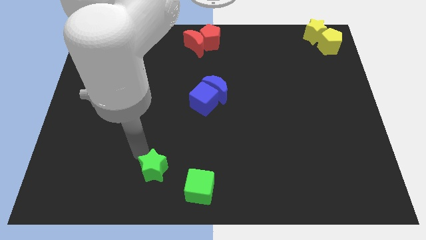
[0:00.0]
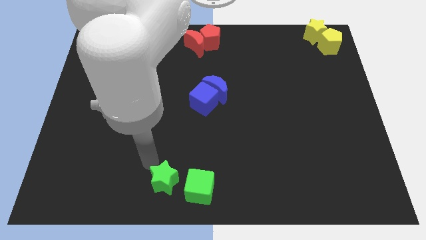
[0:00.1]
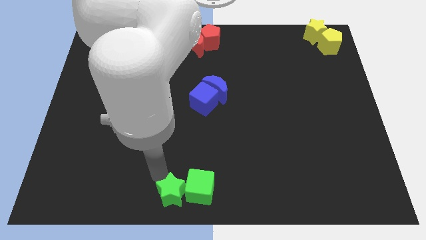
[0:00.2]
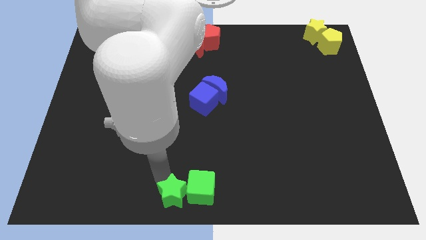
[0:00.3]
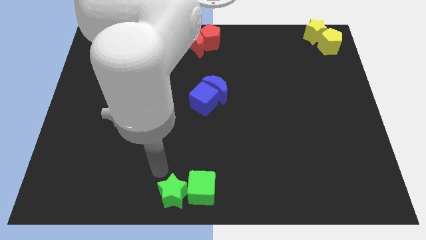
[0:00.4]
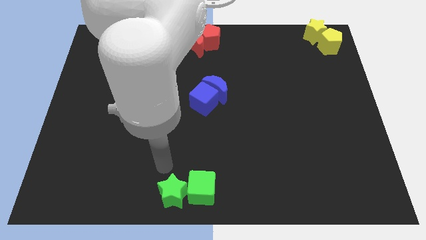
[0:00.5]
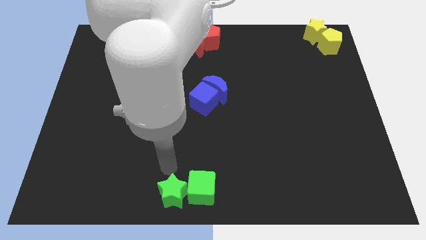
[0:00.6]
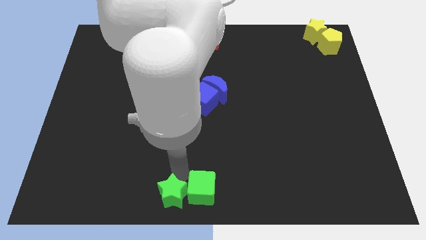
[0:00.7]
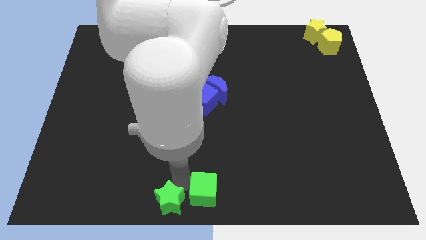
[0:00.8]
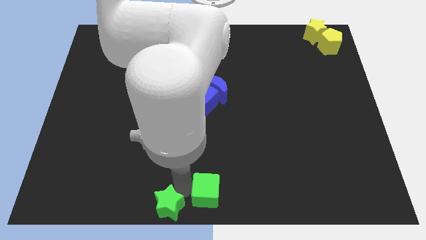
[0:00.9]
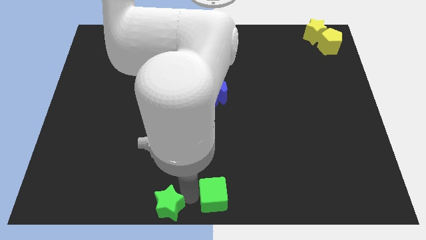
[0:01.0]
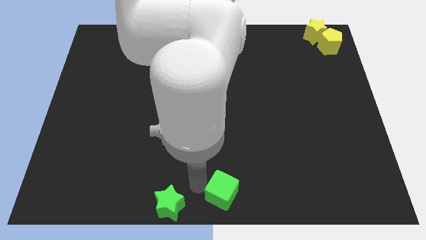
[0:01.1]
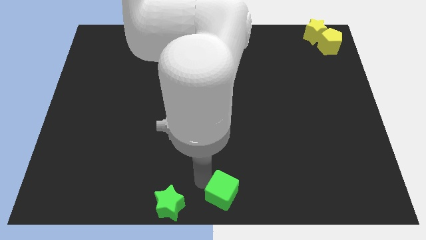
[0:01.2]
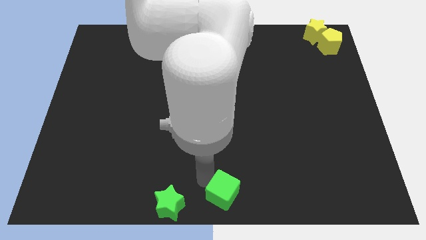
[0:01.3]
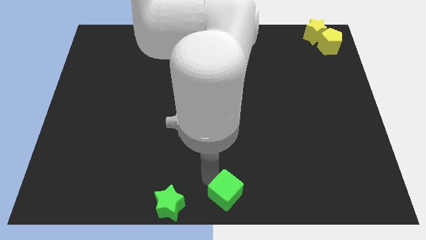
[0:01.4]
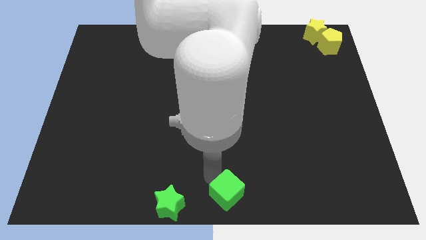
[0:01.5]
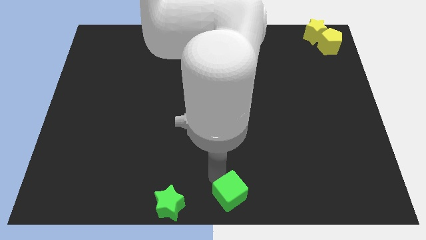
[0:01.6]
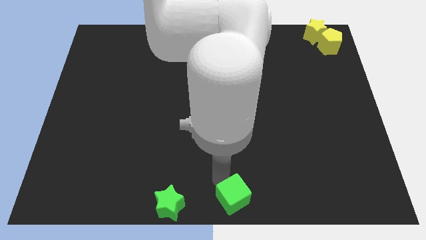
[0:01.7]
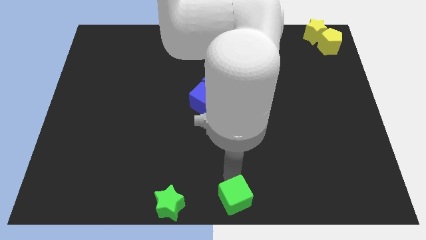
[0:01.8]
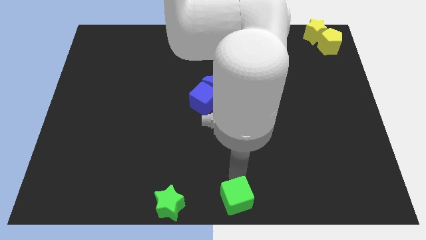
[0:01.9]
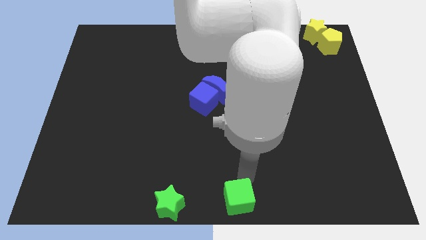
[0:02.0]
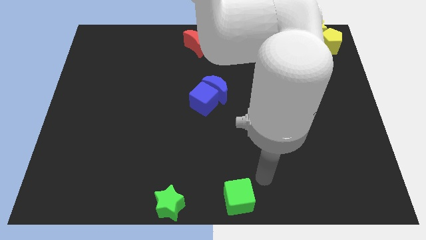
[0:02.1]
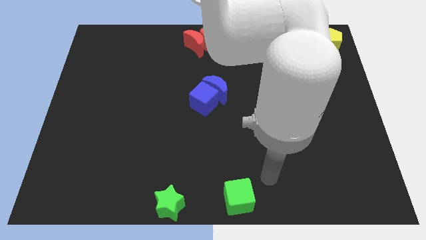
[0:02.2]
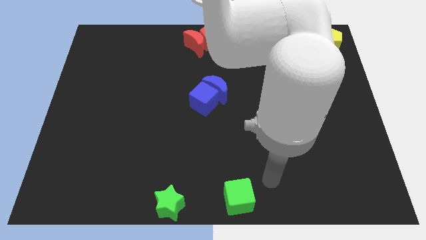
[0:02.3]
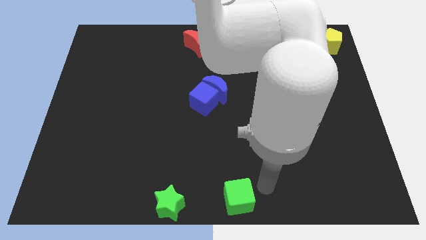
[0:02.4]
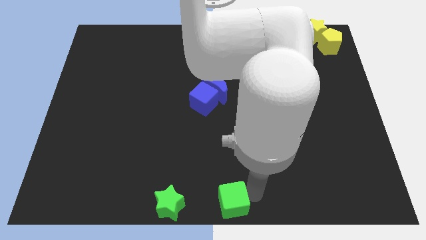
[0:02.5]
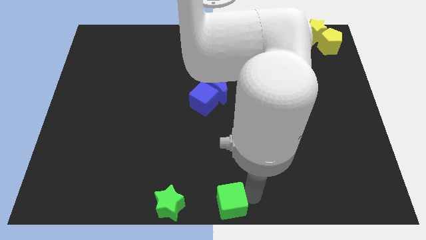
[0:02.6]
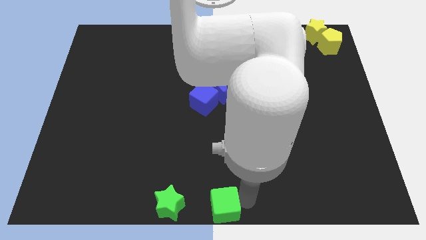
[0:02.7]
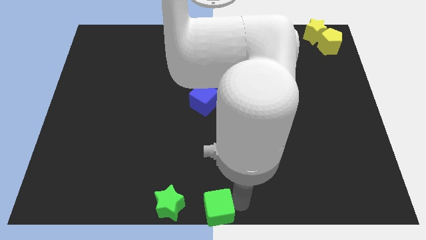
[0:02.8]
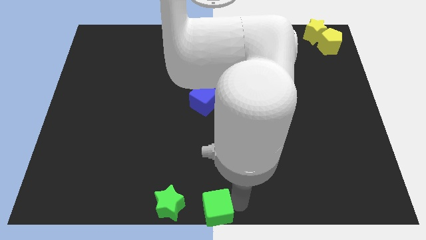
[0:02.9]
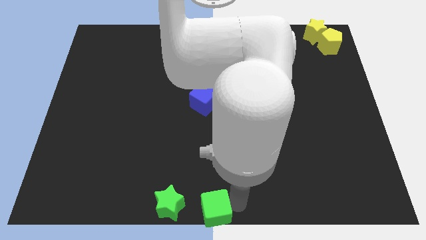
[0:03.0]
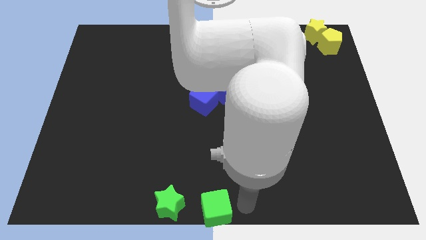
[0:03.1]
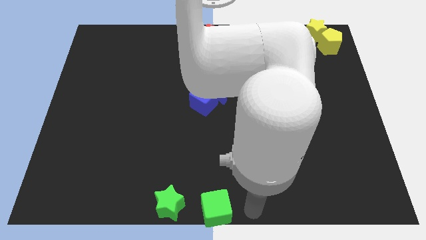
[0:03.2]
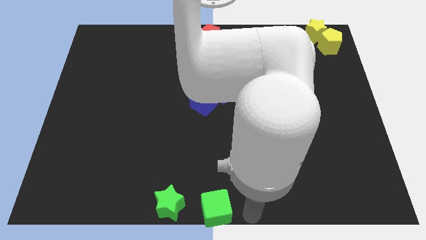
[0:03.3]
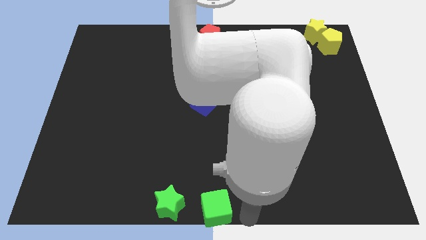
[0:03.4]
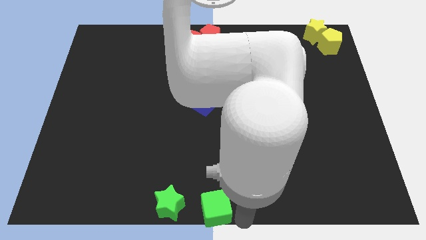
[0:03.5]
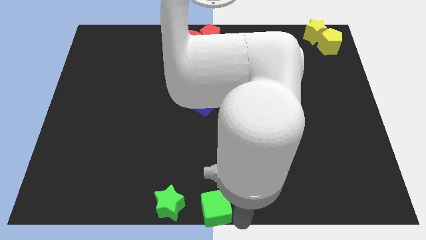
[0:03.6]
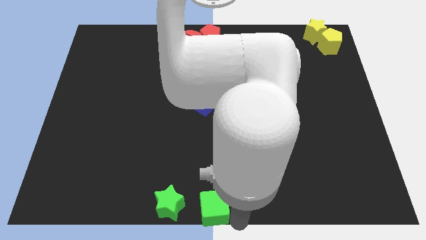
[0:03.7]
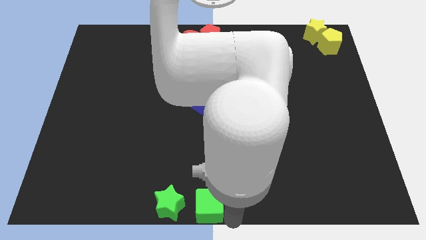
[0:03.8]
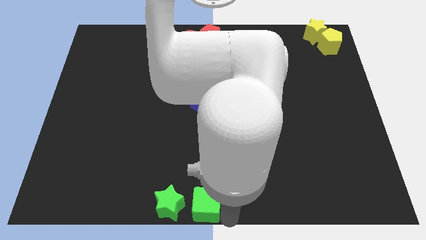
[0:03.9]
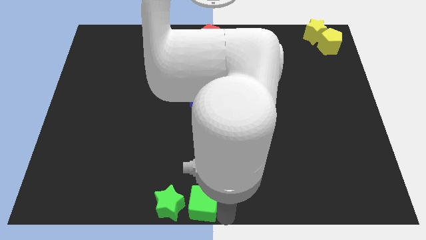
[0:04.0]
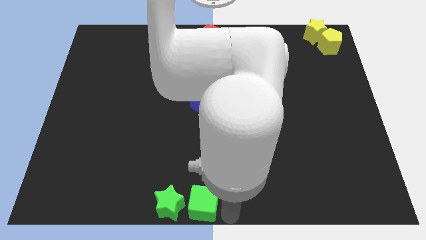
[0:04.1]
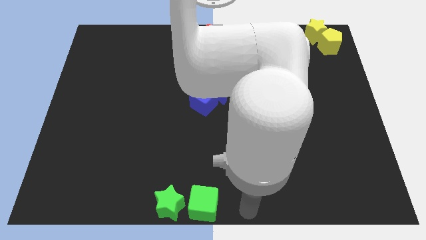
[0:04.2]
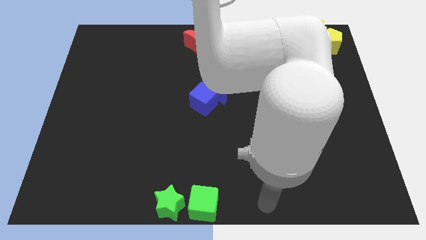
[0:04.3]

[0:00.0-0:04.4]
move the green blocks close to each other

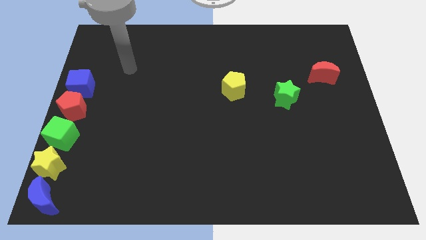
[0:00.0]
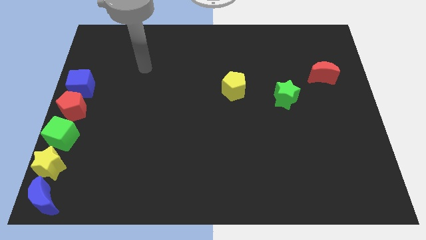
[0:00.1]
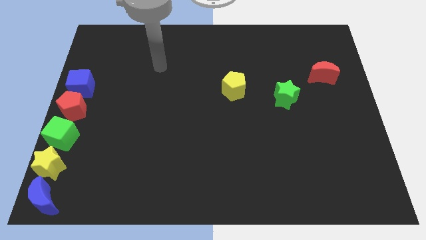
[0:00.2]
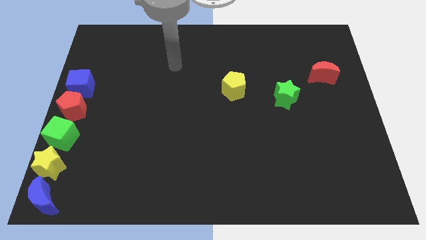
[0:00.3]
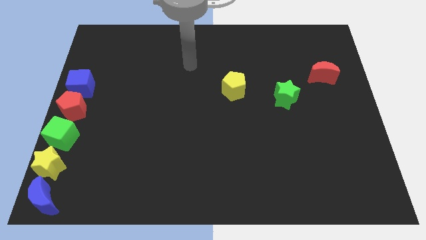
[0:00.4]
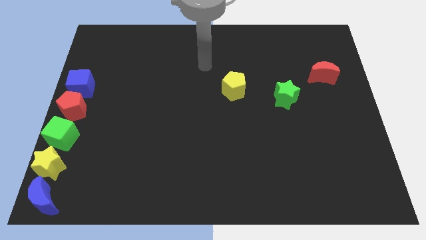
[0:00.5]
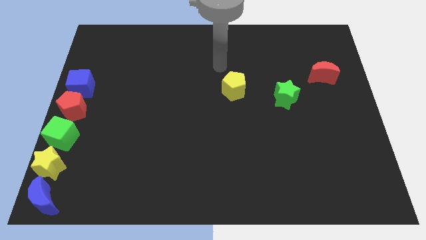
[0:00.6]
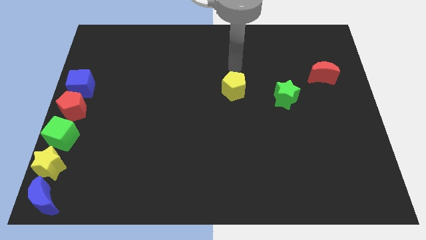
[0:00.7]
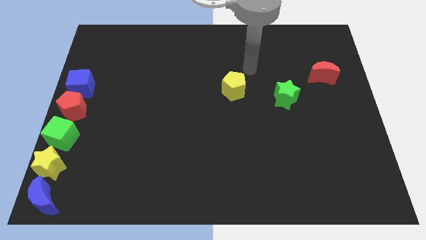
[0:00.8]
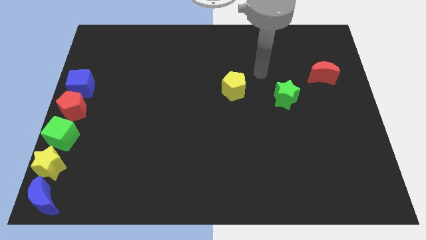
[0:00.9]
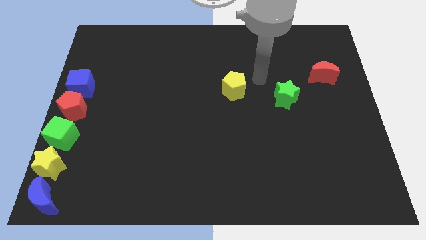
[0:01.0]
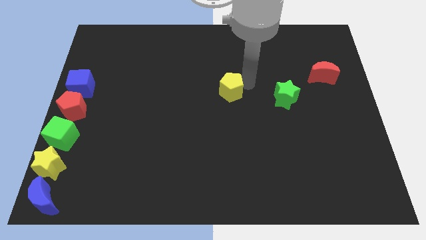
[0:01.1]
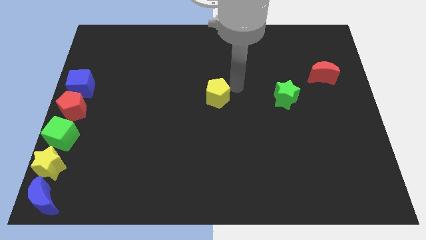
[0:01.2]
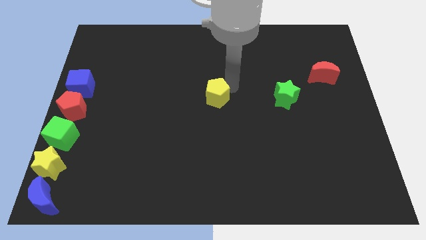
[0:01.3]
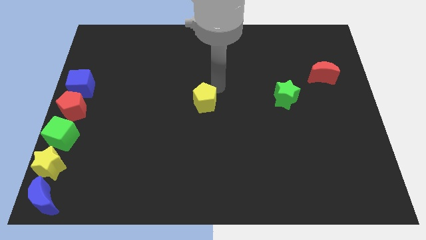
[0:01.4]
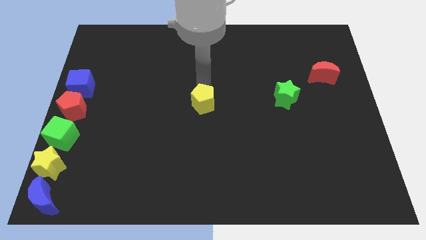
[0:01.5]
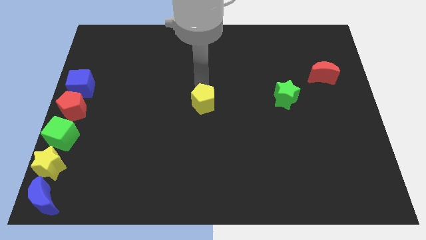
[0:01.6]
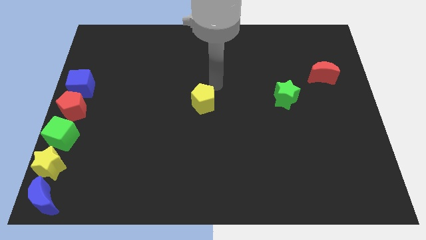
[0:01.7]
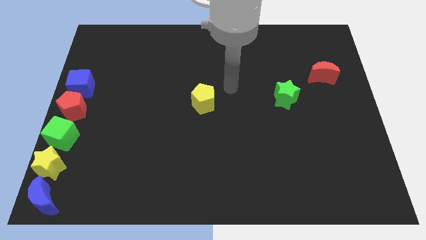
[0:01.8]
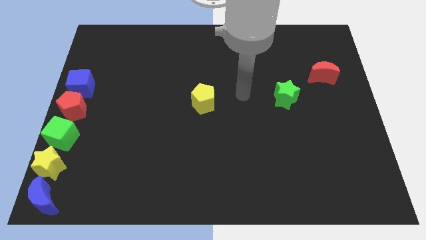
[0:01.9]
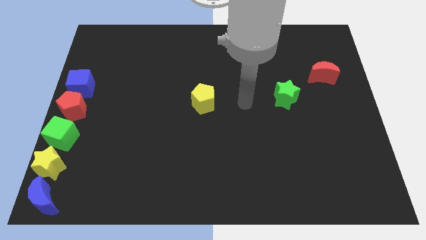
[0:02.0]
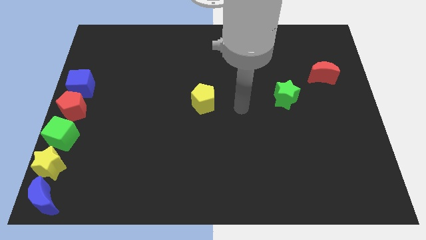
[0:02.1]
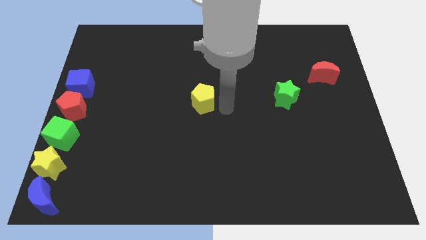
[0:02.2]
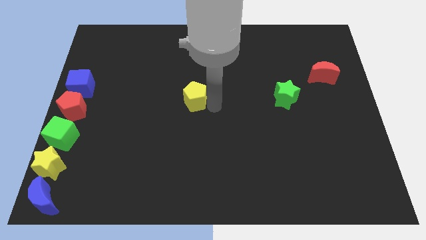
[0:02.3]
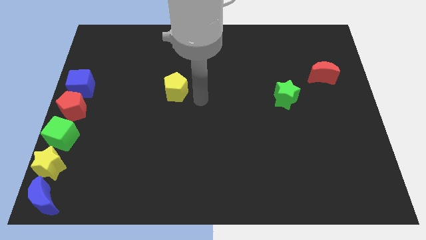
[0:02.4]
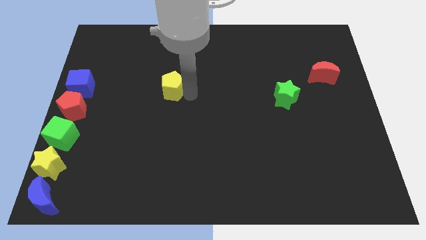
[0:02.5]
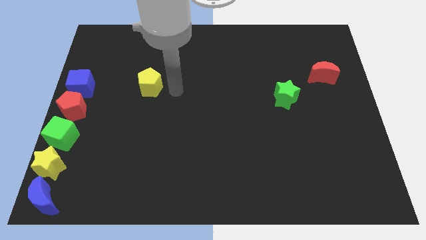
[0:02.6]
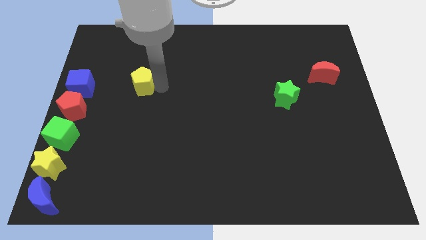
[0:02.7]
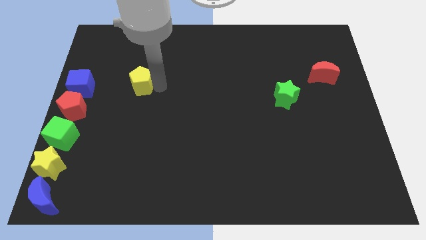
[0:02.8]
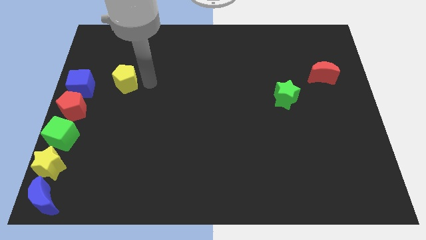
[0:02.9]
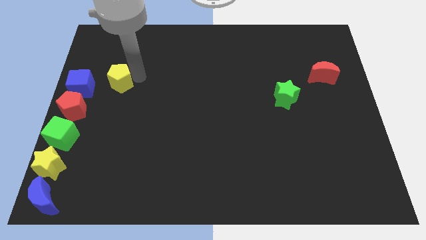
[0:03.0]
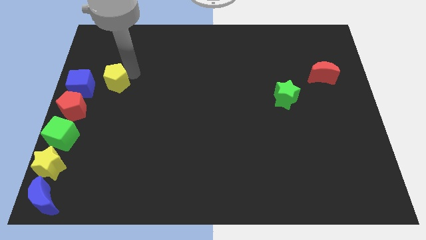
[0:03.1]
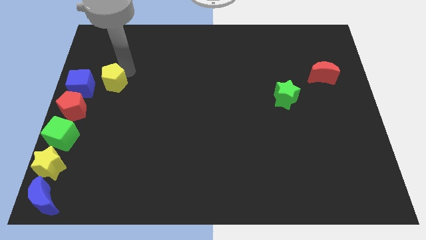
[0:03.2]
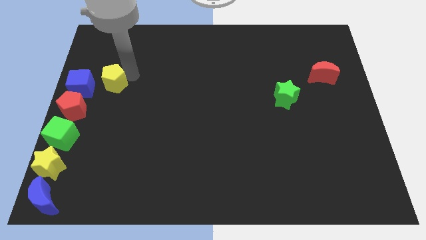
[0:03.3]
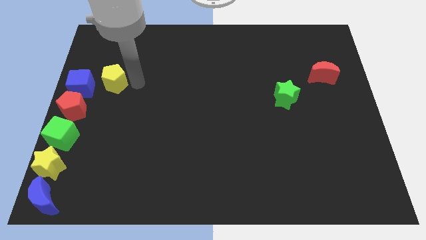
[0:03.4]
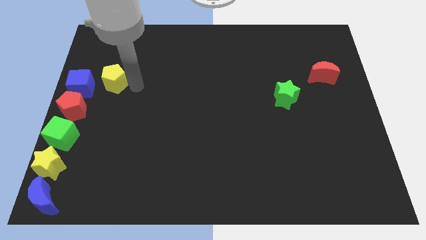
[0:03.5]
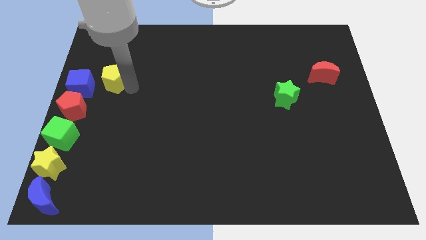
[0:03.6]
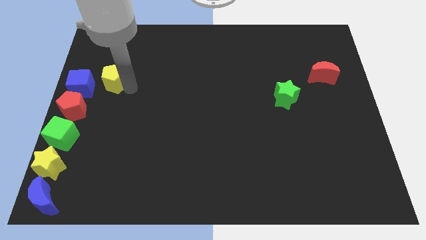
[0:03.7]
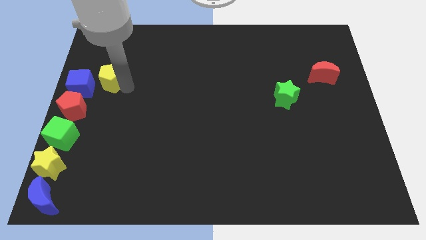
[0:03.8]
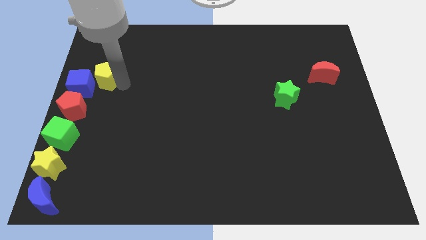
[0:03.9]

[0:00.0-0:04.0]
move the yellow pentagon close to the blue cube

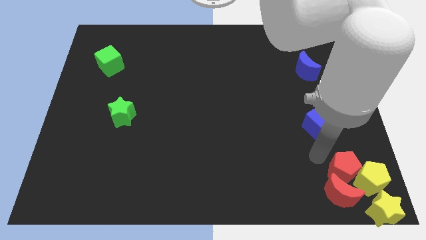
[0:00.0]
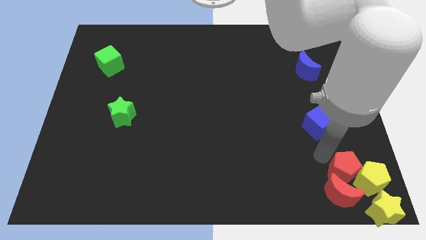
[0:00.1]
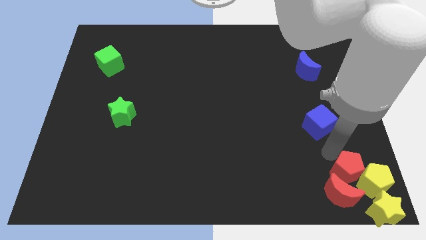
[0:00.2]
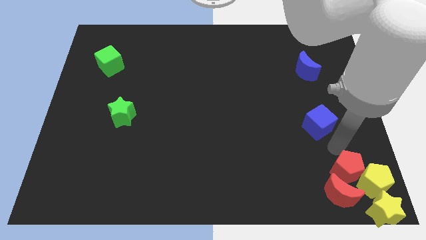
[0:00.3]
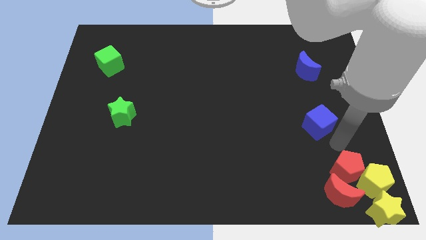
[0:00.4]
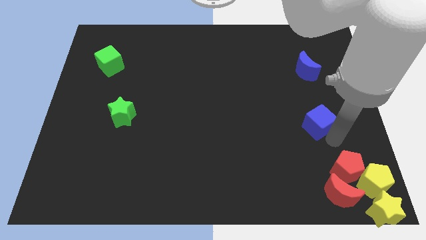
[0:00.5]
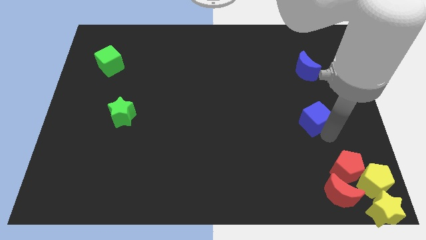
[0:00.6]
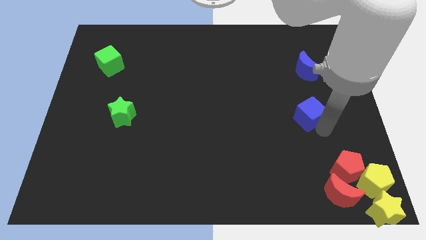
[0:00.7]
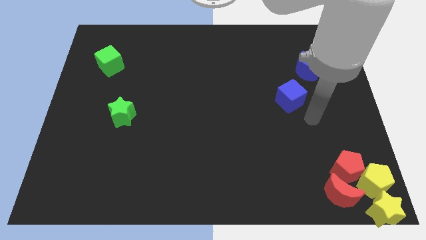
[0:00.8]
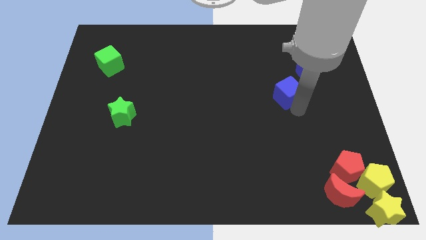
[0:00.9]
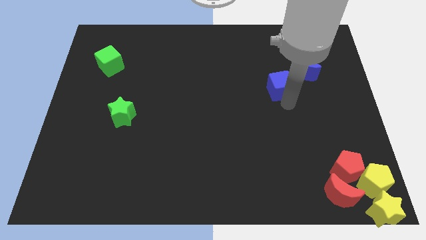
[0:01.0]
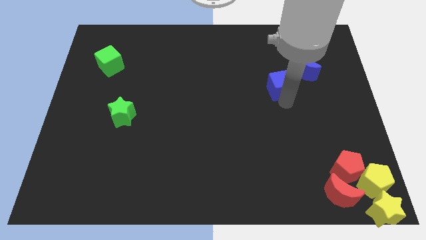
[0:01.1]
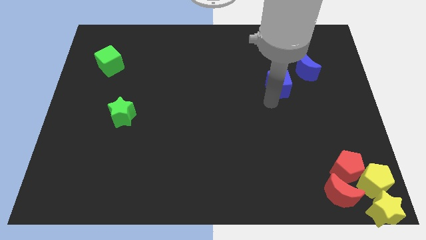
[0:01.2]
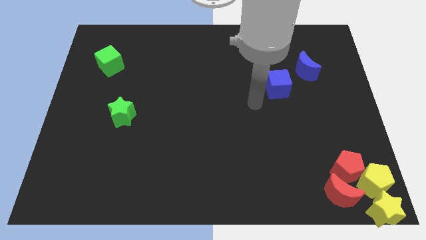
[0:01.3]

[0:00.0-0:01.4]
move the blue cube diagonally bottom left to the blue moon
